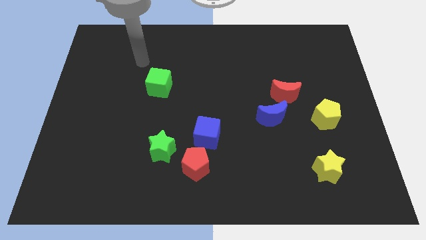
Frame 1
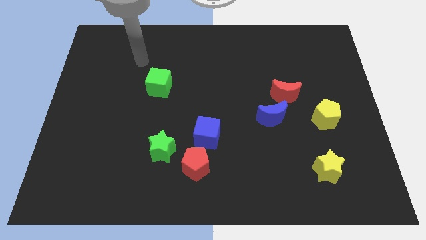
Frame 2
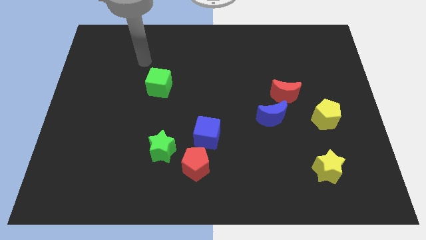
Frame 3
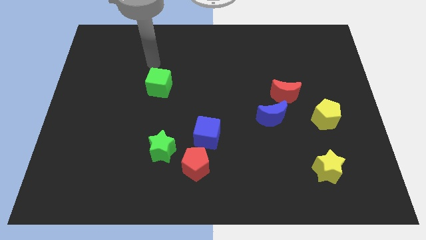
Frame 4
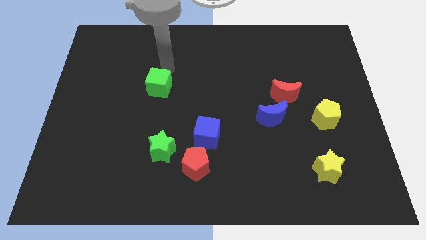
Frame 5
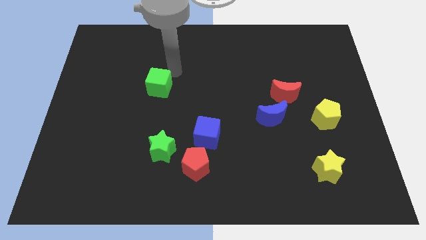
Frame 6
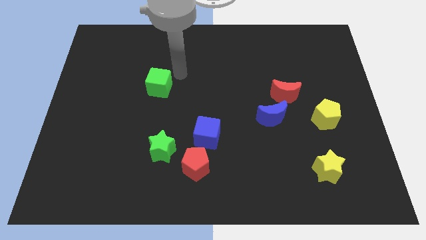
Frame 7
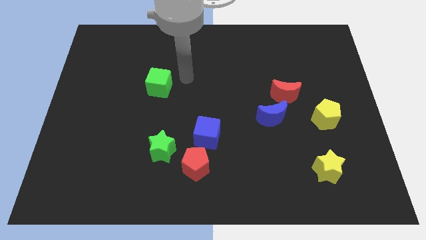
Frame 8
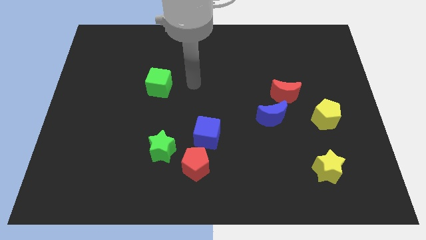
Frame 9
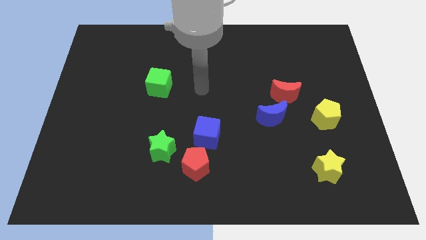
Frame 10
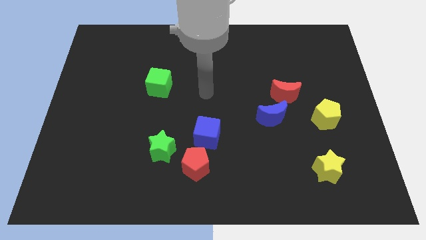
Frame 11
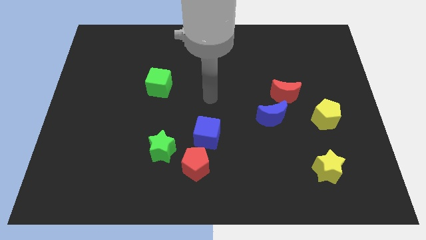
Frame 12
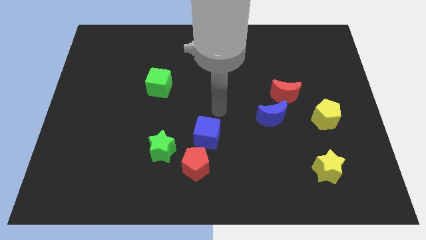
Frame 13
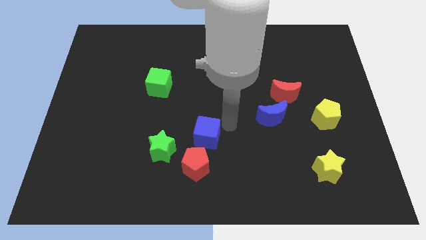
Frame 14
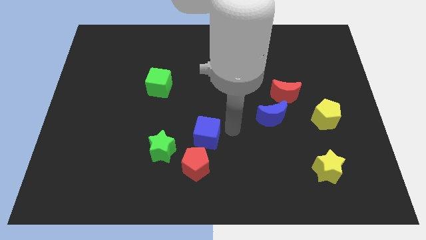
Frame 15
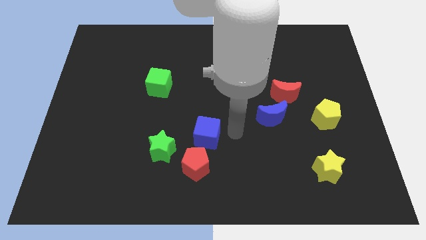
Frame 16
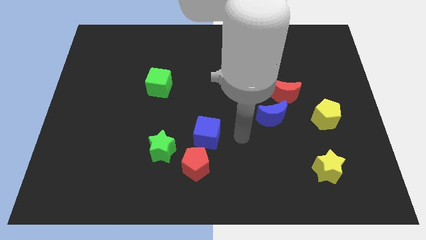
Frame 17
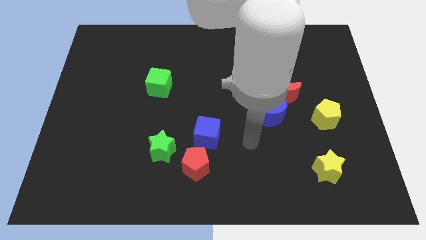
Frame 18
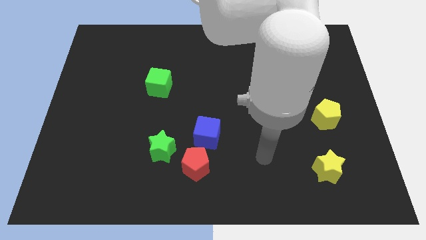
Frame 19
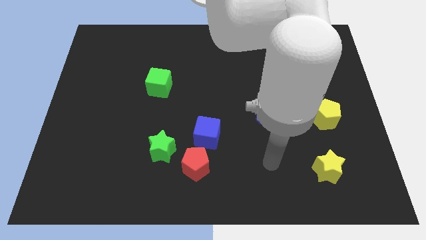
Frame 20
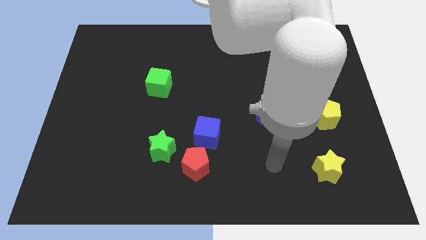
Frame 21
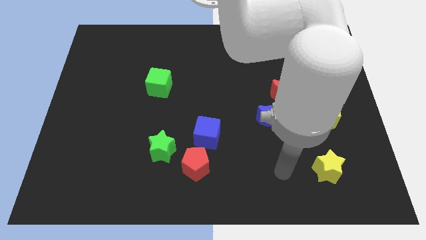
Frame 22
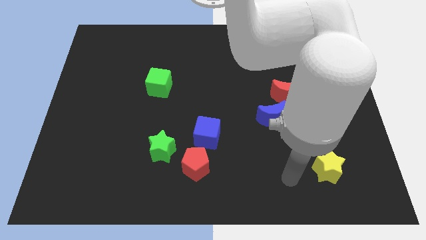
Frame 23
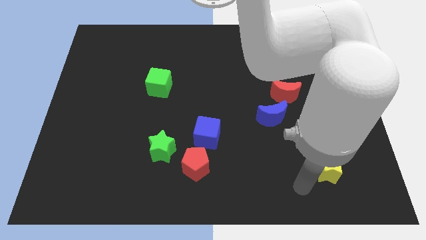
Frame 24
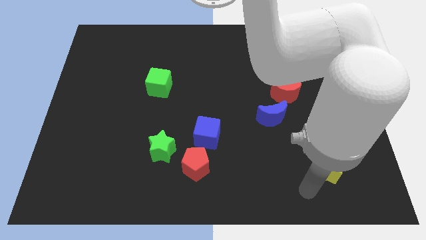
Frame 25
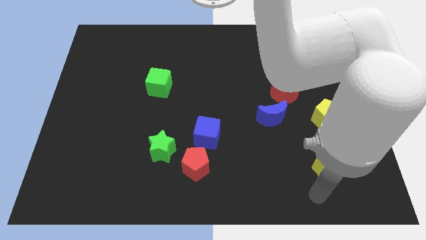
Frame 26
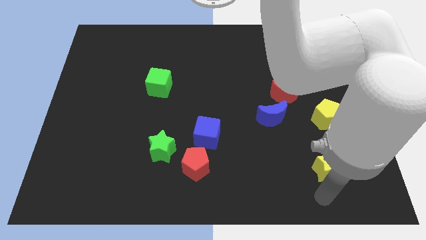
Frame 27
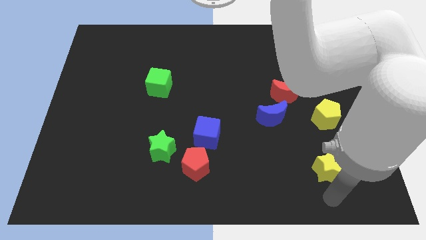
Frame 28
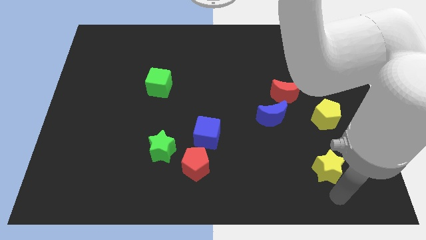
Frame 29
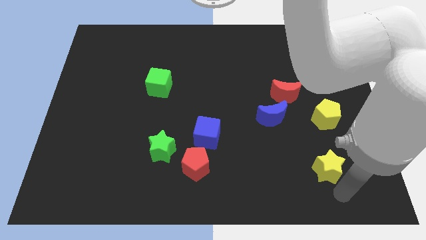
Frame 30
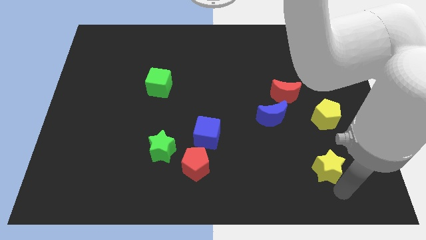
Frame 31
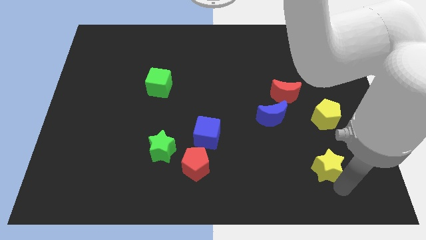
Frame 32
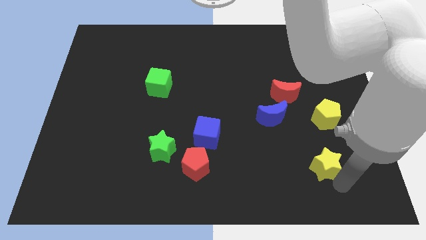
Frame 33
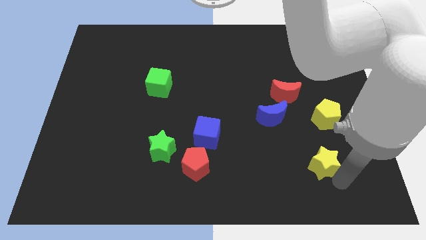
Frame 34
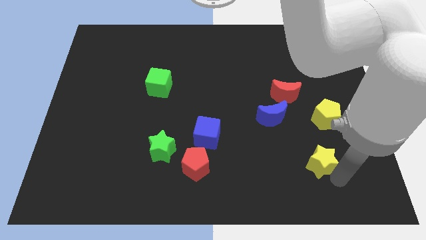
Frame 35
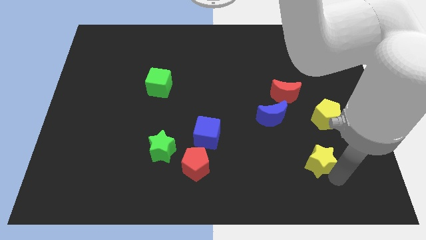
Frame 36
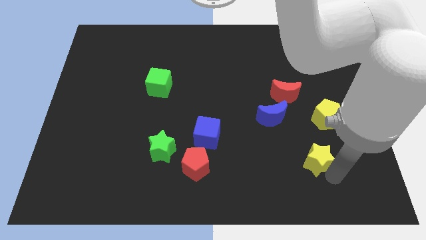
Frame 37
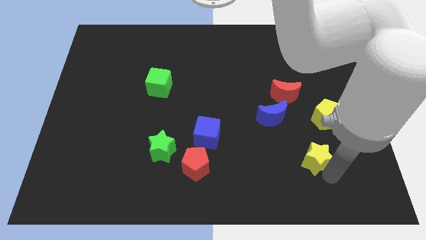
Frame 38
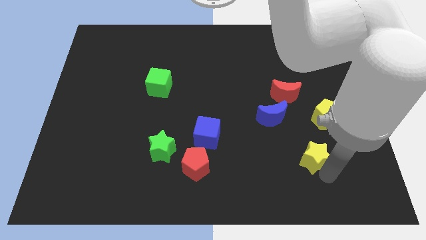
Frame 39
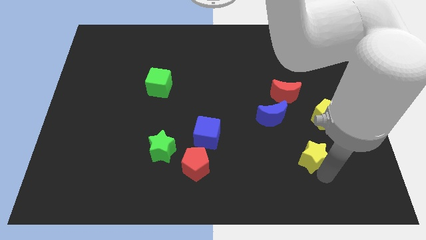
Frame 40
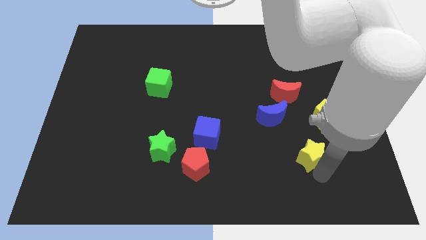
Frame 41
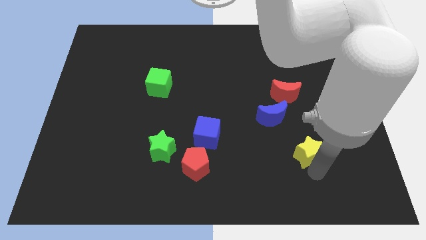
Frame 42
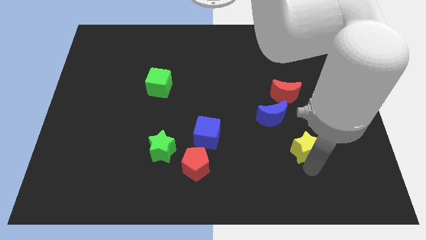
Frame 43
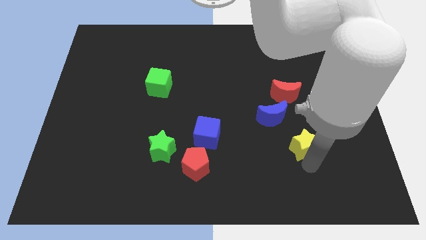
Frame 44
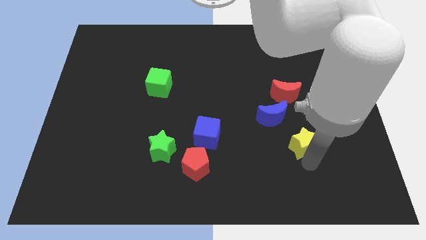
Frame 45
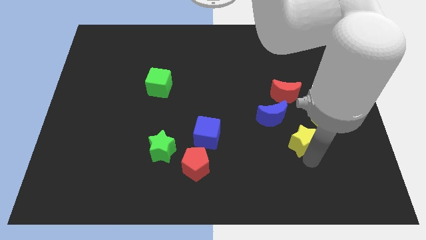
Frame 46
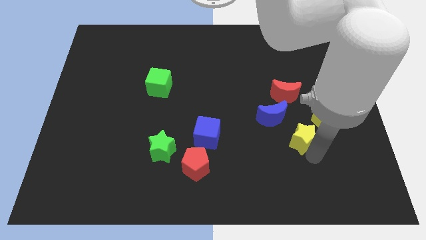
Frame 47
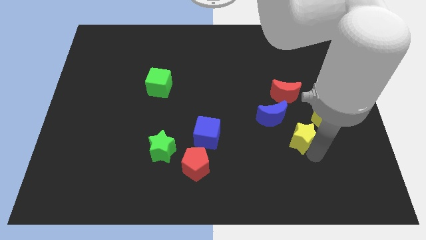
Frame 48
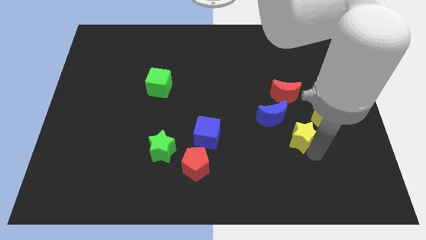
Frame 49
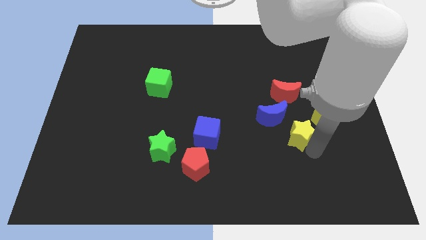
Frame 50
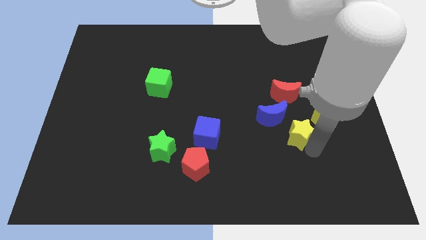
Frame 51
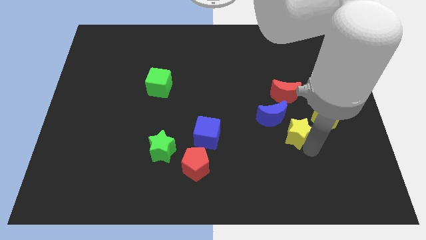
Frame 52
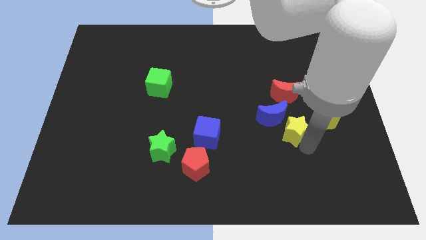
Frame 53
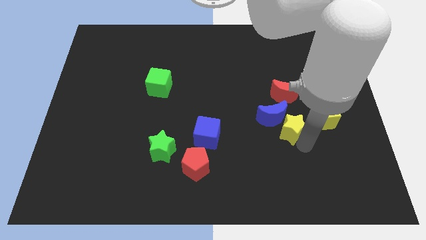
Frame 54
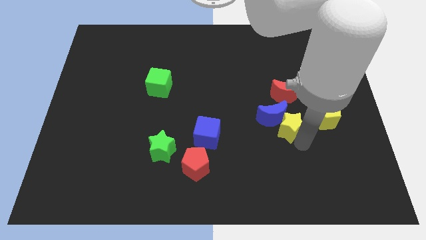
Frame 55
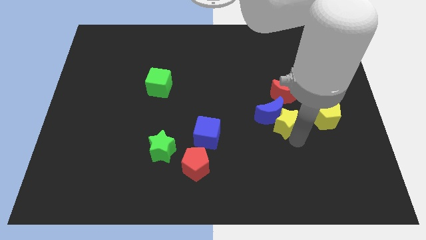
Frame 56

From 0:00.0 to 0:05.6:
move the yellow star towards the blue moon

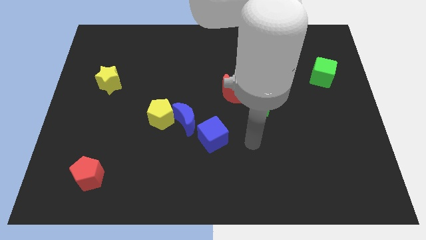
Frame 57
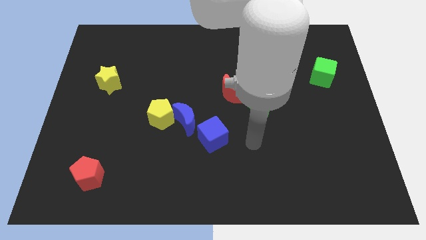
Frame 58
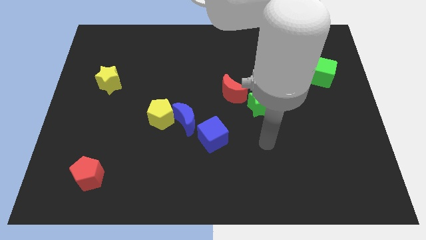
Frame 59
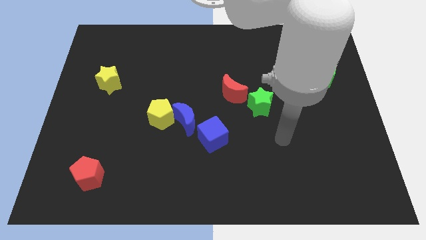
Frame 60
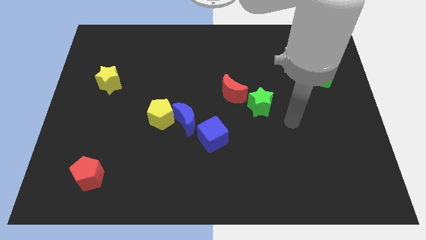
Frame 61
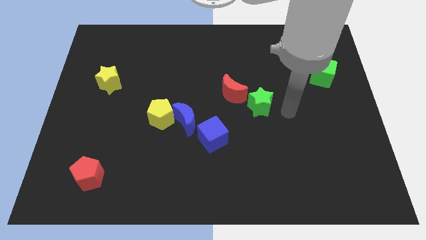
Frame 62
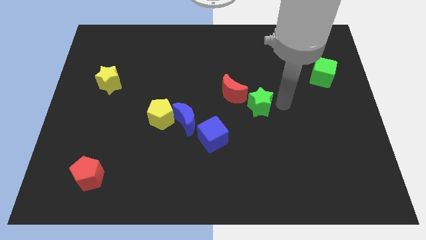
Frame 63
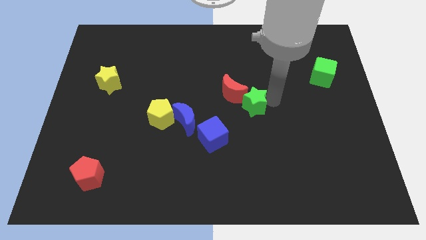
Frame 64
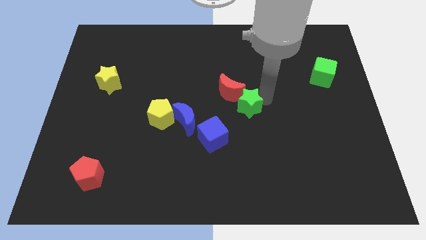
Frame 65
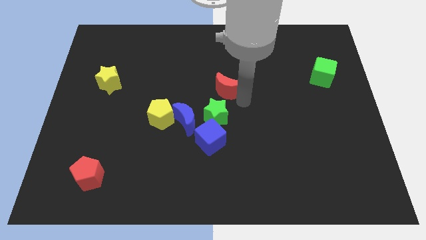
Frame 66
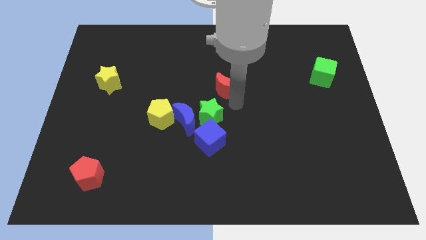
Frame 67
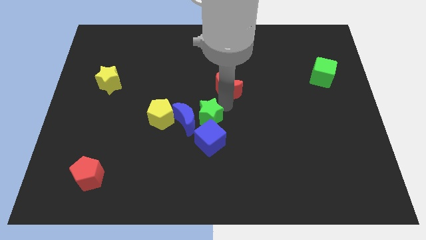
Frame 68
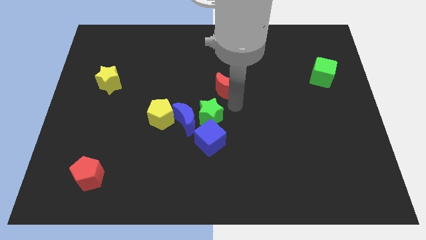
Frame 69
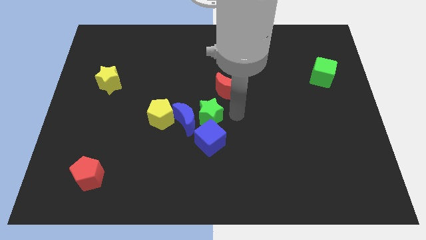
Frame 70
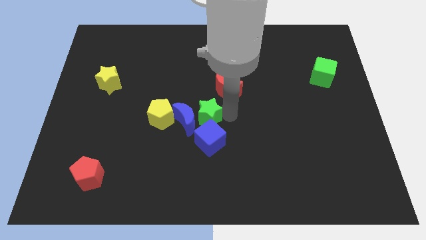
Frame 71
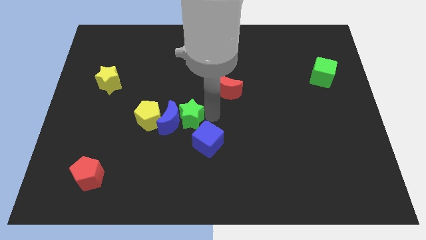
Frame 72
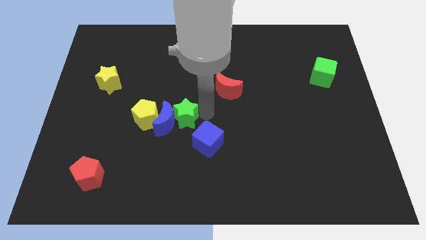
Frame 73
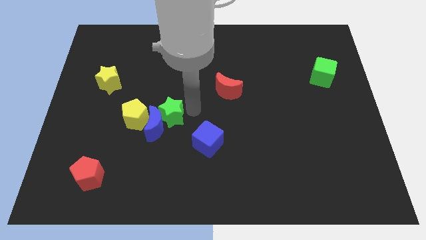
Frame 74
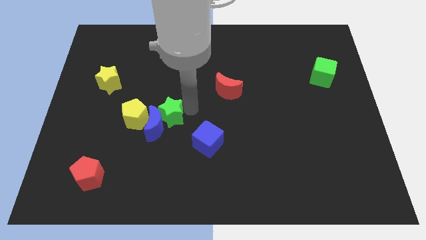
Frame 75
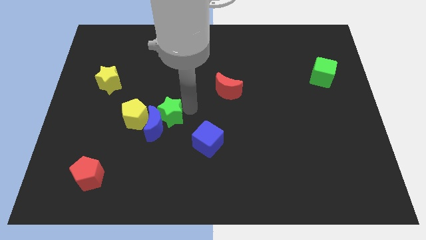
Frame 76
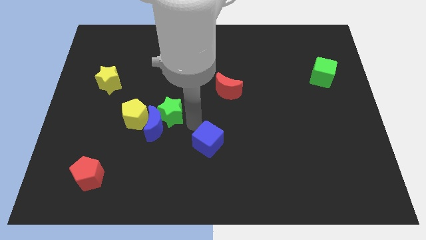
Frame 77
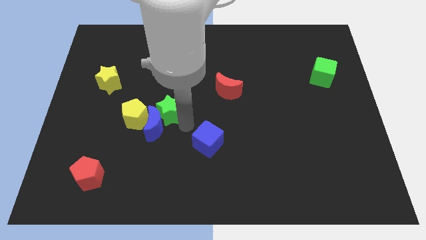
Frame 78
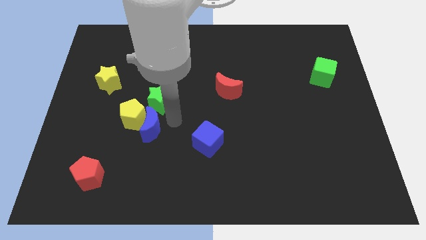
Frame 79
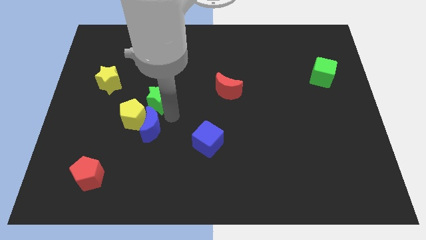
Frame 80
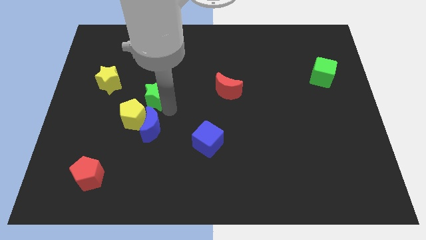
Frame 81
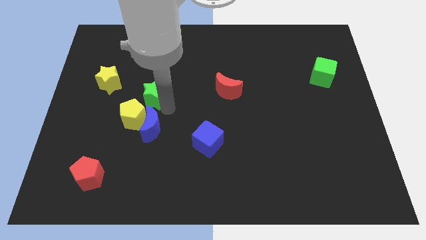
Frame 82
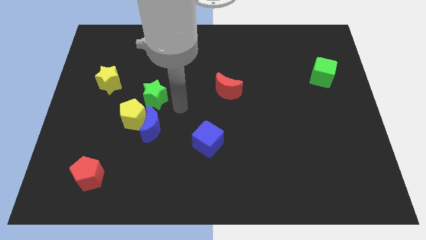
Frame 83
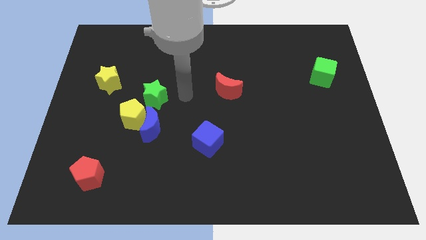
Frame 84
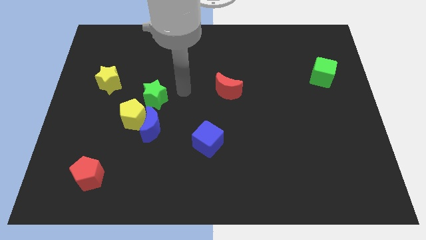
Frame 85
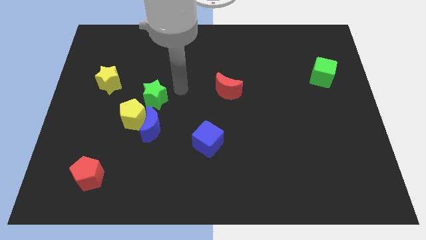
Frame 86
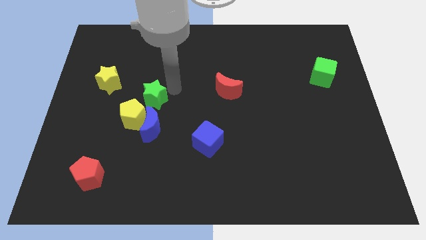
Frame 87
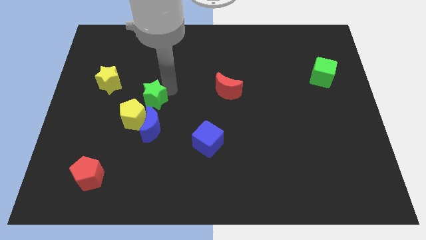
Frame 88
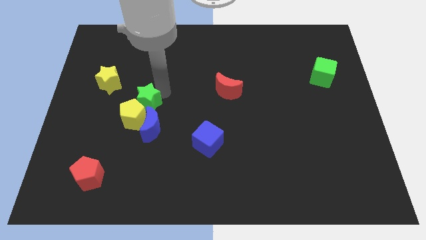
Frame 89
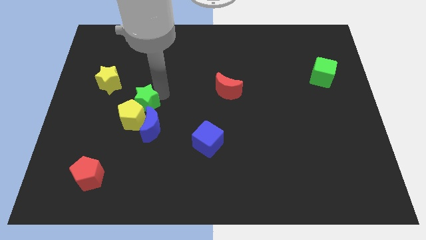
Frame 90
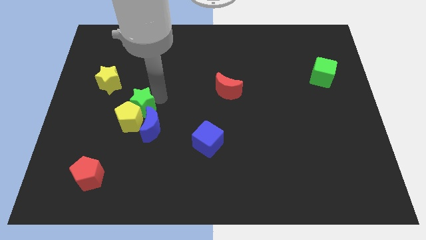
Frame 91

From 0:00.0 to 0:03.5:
push the green star to the yellow pentagon
